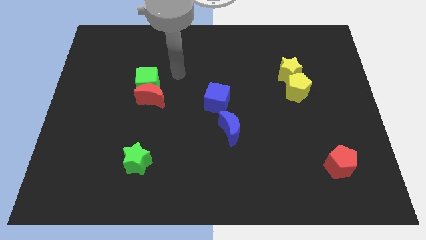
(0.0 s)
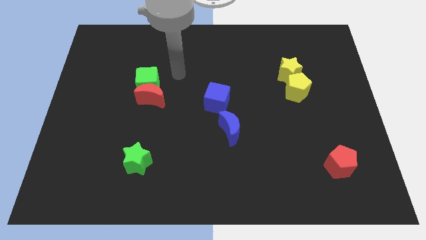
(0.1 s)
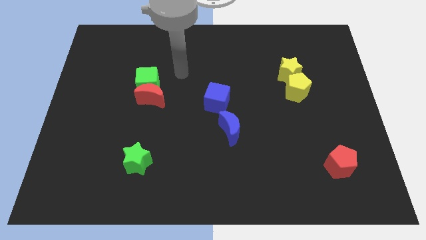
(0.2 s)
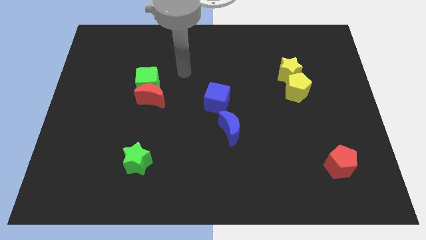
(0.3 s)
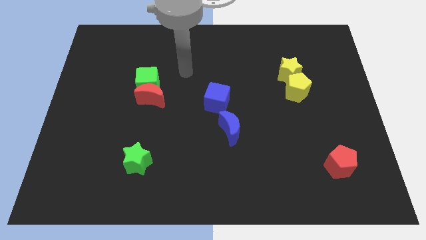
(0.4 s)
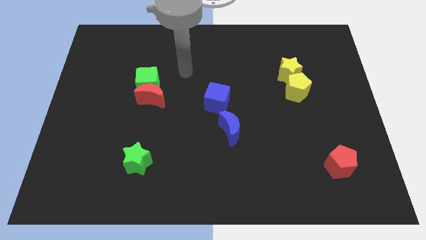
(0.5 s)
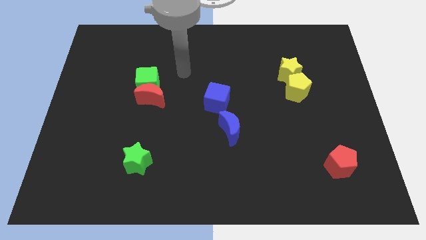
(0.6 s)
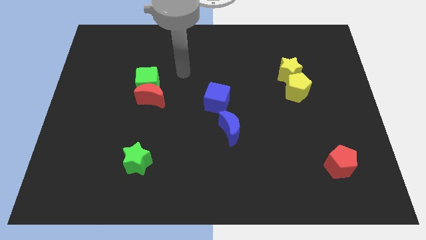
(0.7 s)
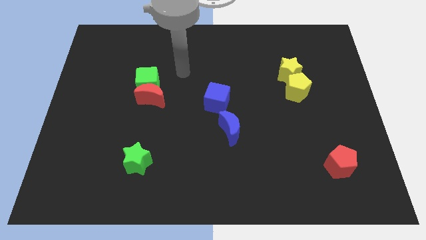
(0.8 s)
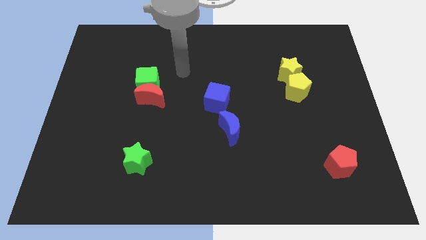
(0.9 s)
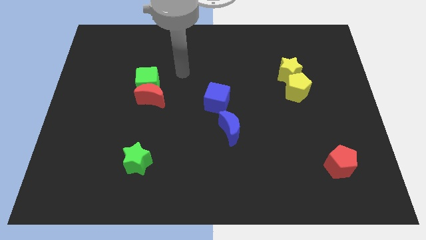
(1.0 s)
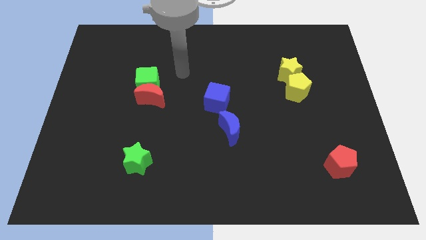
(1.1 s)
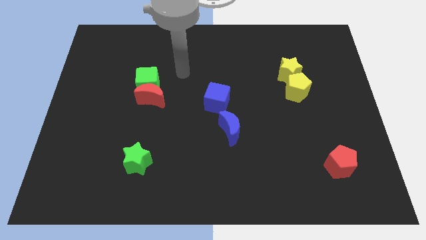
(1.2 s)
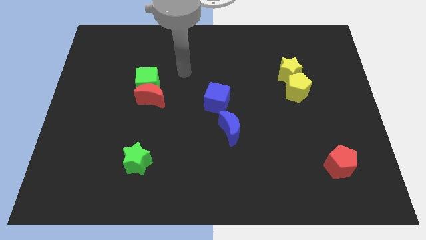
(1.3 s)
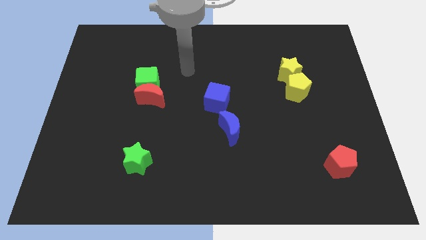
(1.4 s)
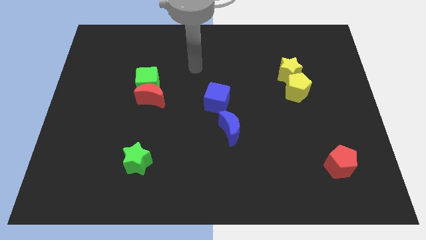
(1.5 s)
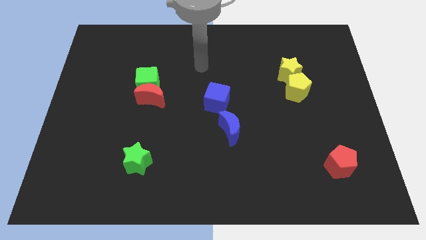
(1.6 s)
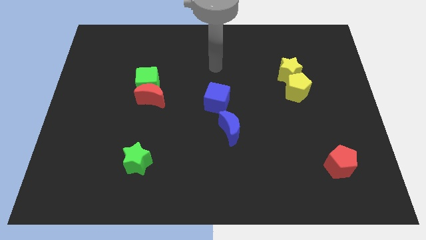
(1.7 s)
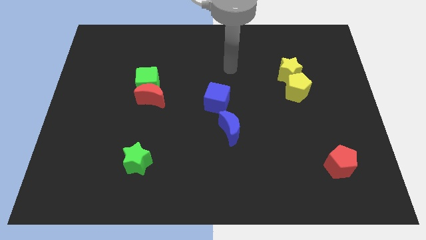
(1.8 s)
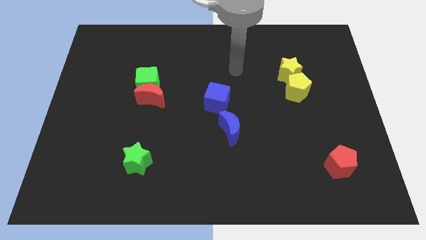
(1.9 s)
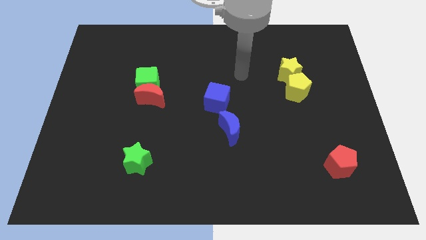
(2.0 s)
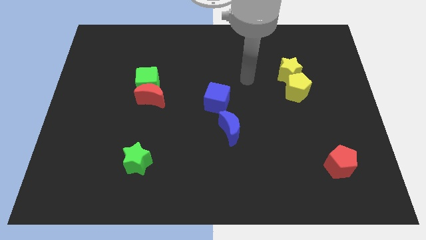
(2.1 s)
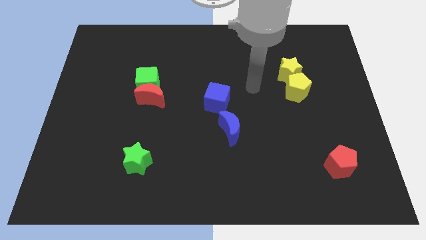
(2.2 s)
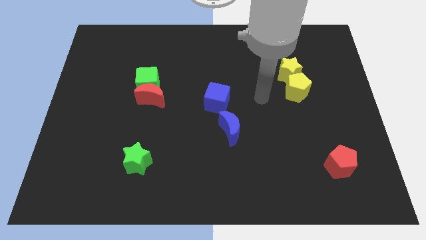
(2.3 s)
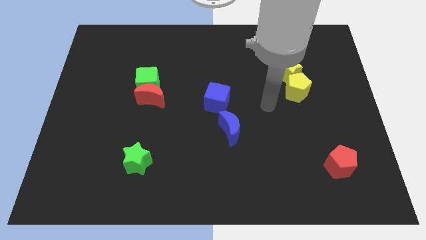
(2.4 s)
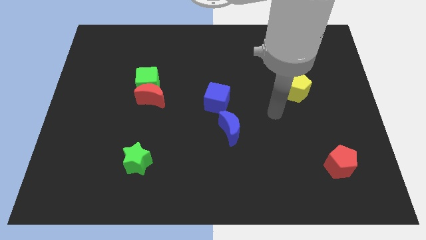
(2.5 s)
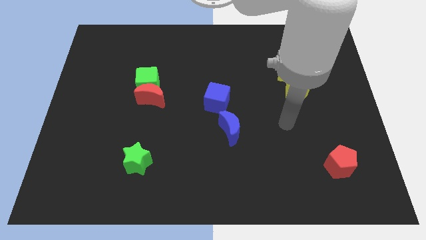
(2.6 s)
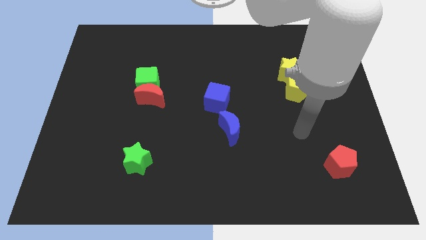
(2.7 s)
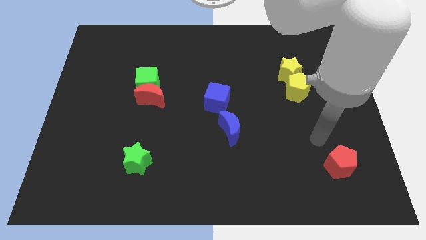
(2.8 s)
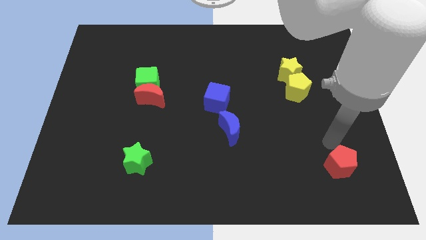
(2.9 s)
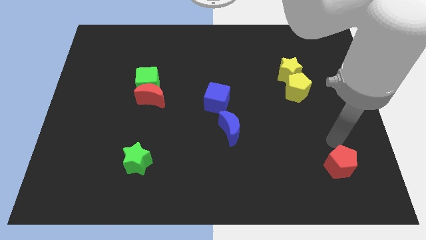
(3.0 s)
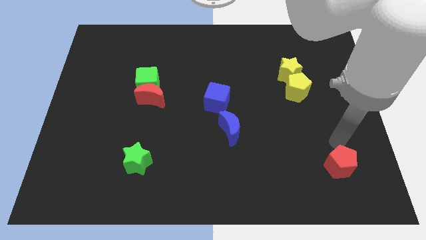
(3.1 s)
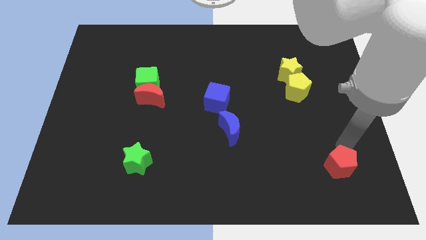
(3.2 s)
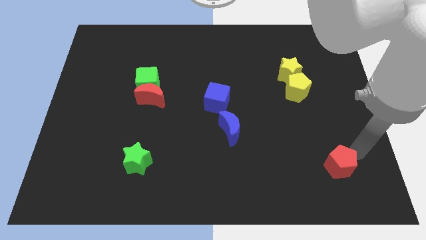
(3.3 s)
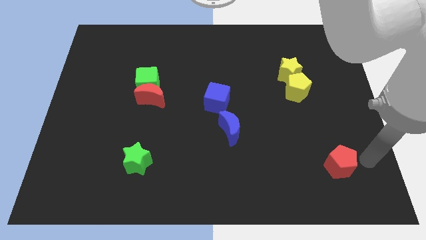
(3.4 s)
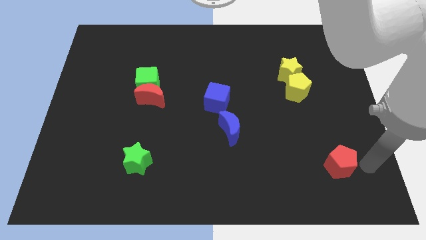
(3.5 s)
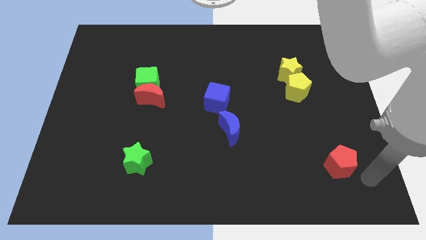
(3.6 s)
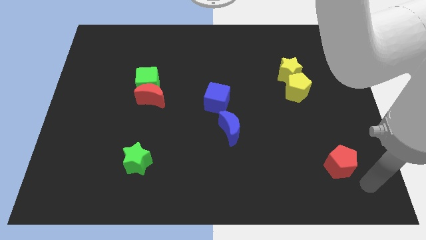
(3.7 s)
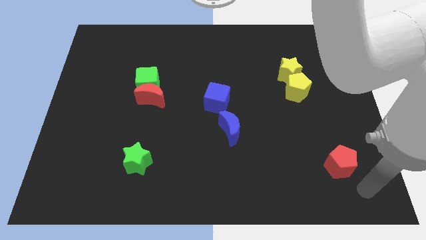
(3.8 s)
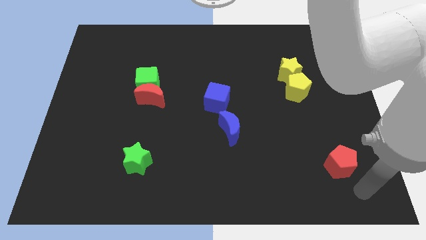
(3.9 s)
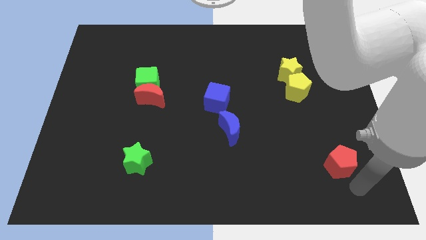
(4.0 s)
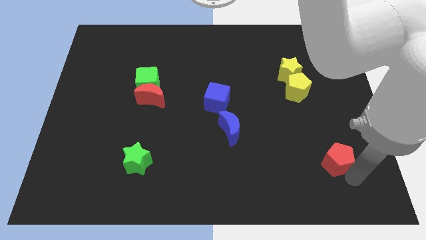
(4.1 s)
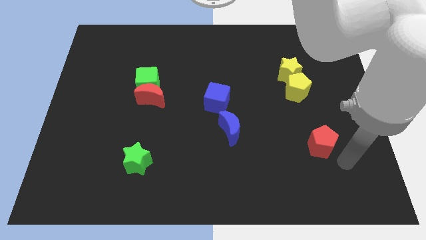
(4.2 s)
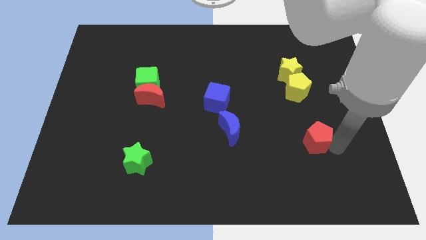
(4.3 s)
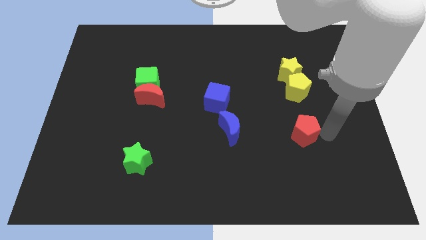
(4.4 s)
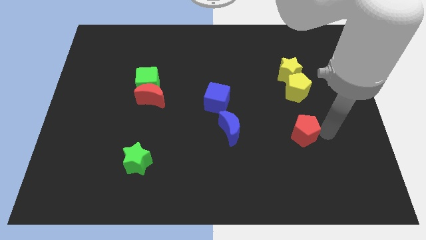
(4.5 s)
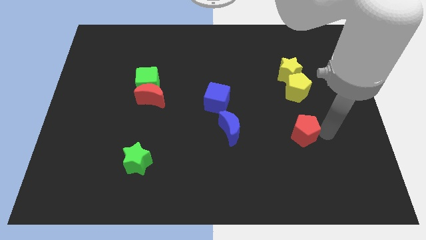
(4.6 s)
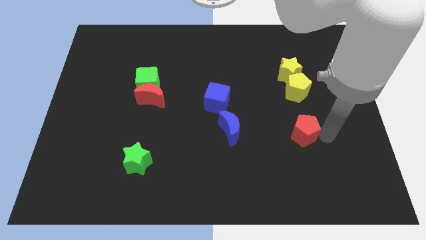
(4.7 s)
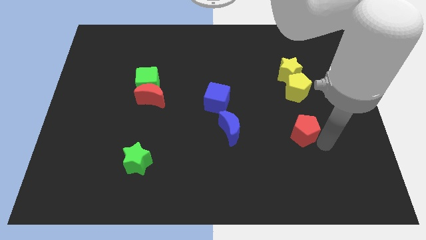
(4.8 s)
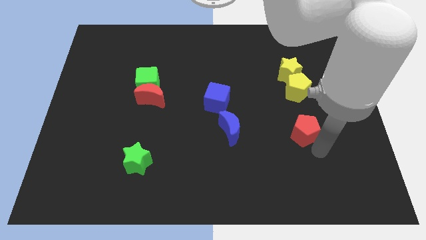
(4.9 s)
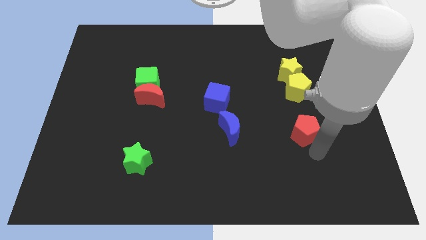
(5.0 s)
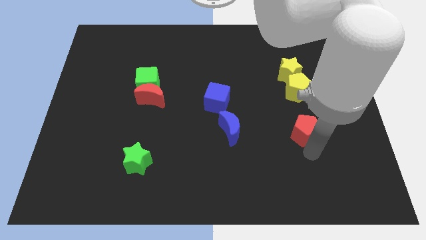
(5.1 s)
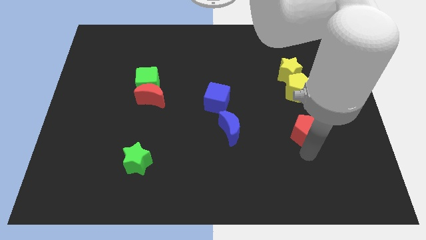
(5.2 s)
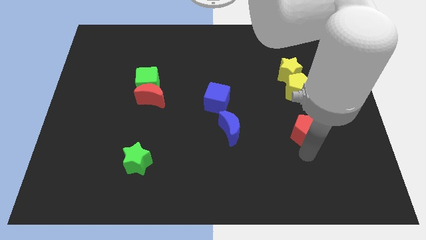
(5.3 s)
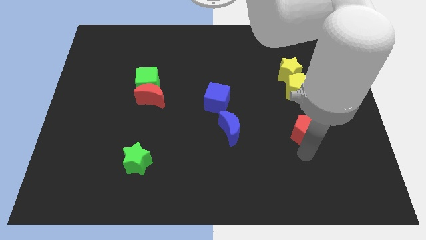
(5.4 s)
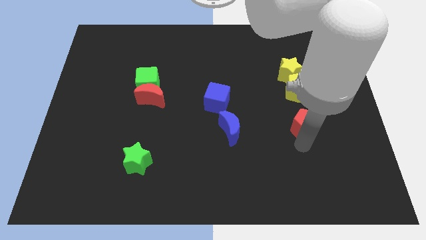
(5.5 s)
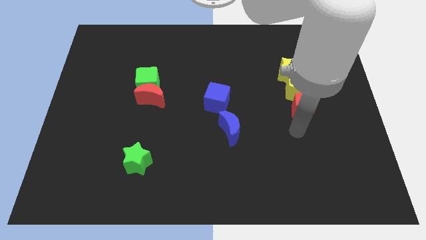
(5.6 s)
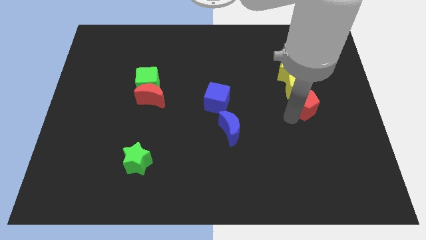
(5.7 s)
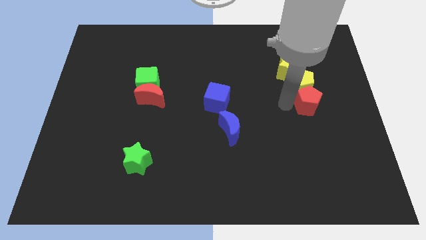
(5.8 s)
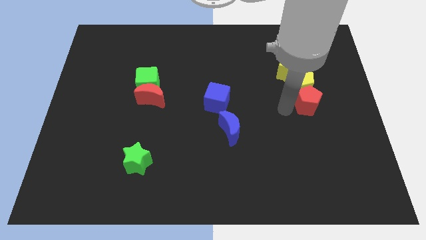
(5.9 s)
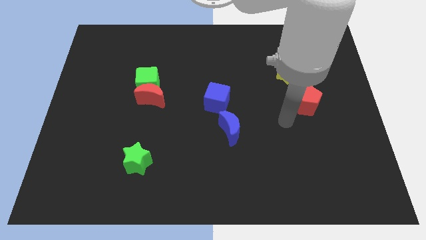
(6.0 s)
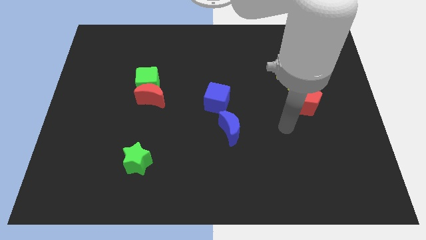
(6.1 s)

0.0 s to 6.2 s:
push the red pentagon into the yellow pentagon

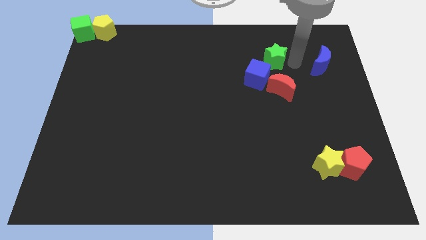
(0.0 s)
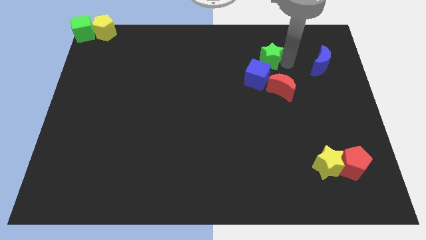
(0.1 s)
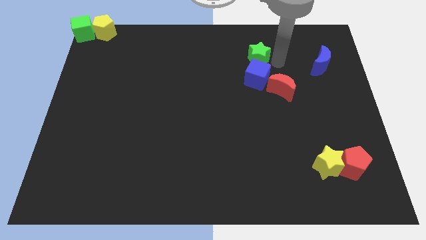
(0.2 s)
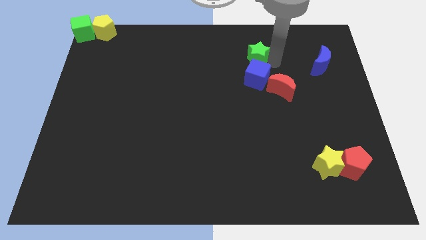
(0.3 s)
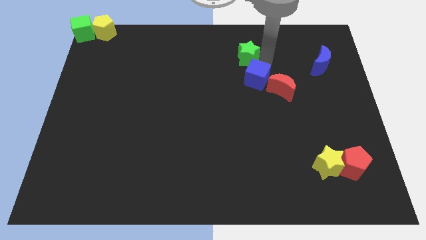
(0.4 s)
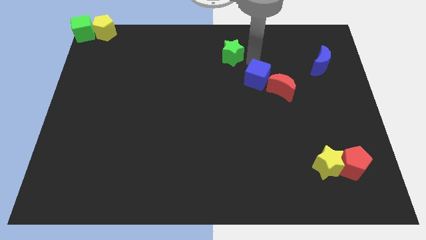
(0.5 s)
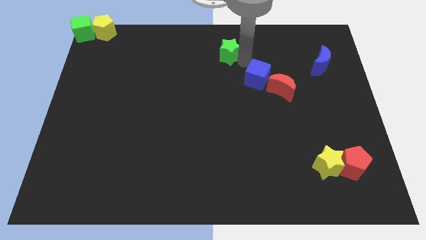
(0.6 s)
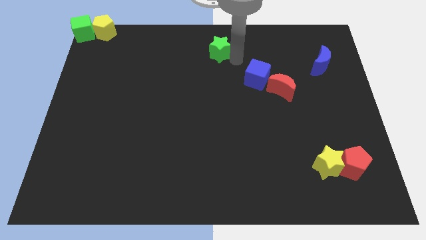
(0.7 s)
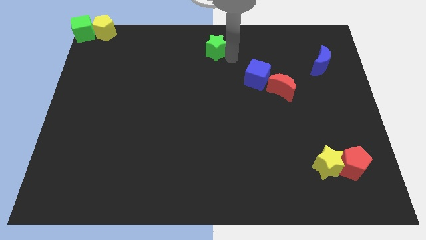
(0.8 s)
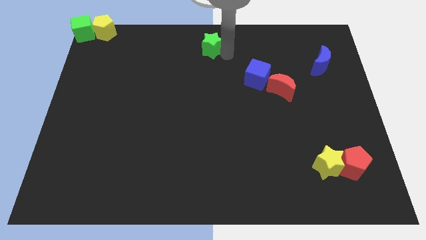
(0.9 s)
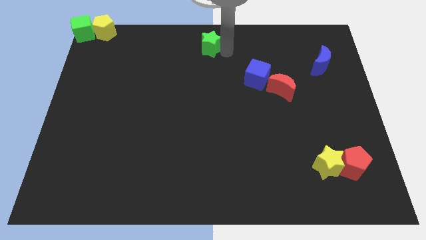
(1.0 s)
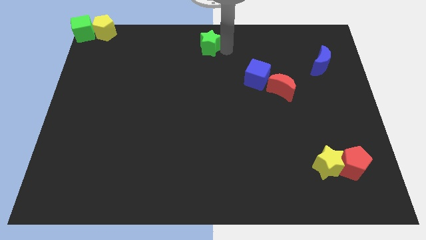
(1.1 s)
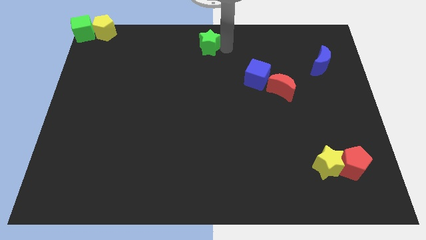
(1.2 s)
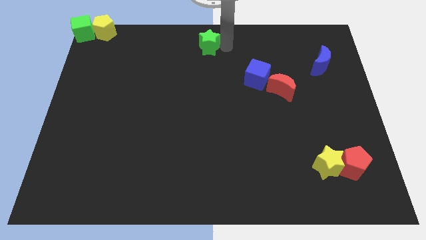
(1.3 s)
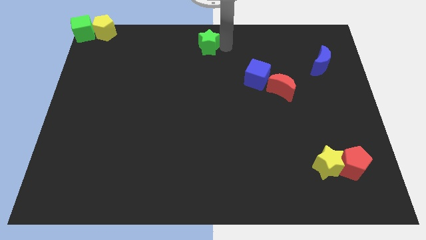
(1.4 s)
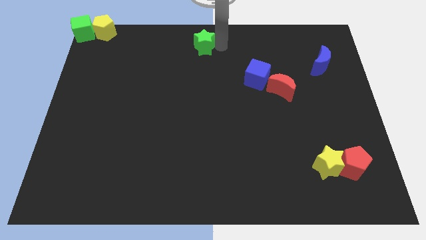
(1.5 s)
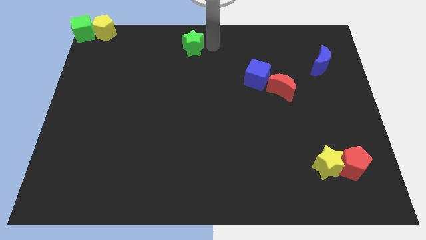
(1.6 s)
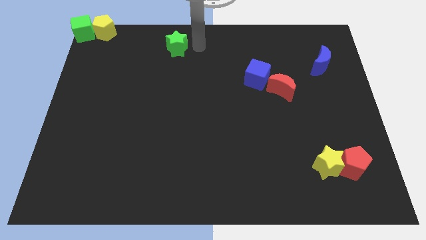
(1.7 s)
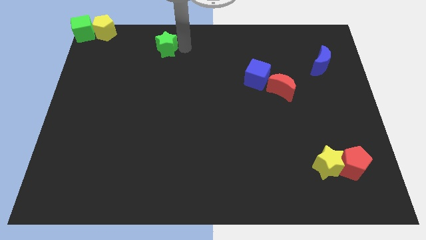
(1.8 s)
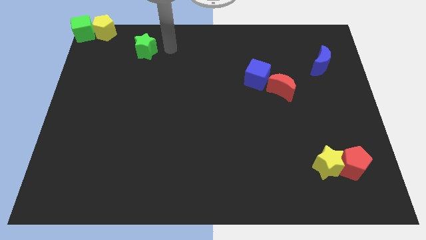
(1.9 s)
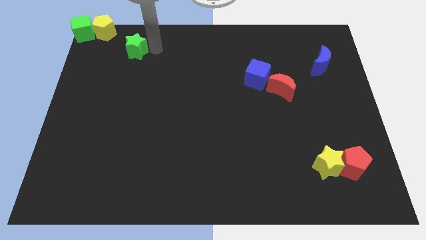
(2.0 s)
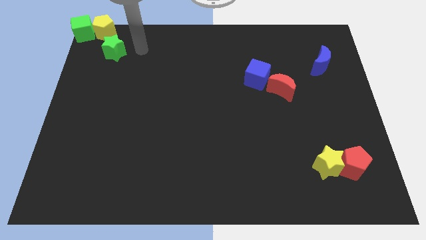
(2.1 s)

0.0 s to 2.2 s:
push the green star diagonally to yellow pentagon

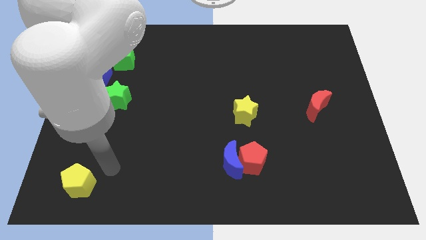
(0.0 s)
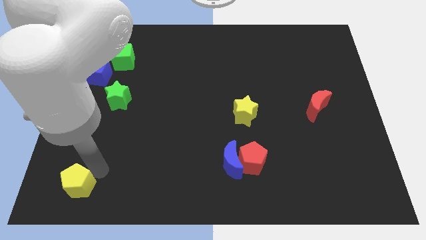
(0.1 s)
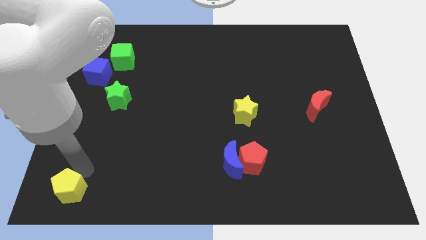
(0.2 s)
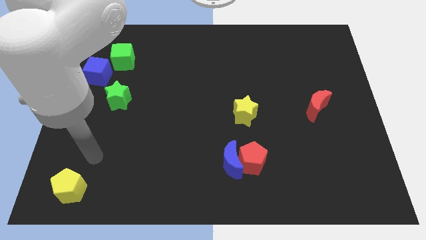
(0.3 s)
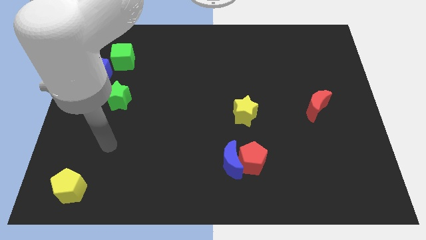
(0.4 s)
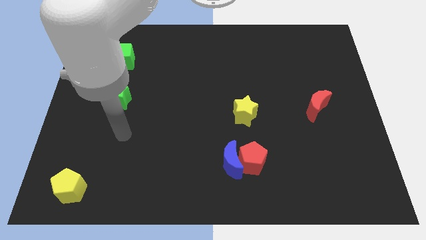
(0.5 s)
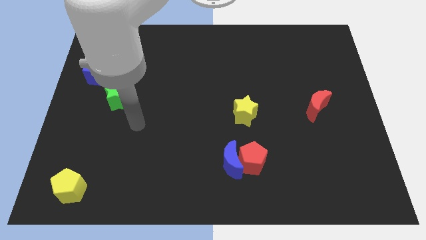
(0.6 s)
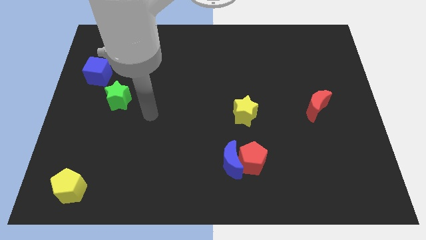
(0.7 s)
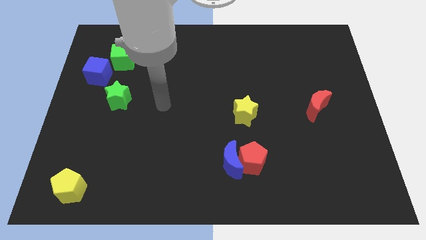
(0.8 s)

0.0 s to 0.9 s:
tap the top side of the yellow pentagon
